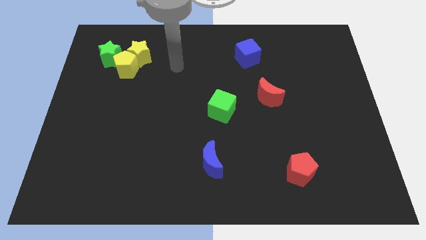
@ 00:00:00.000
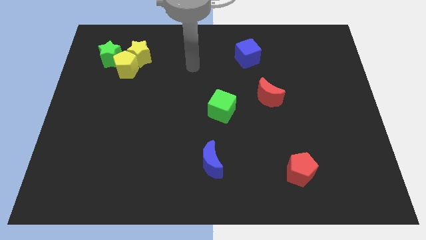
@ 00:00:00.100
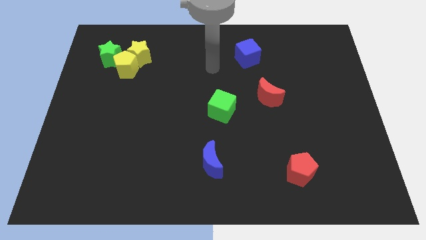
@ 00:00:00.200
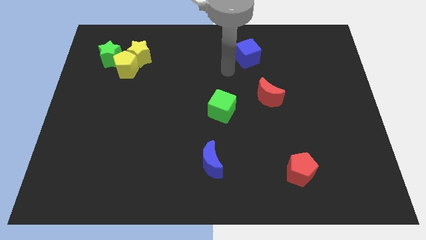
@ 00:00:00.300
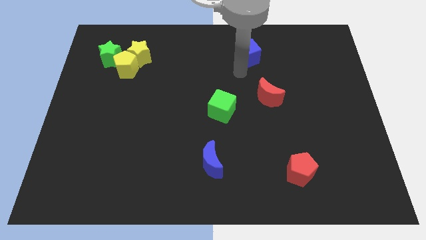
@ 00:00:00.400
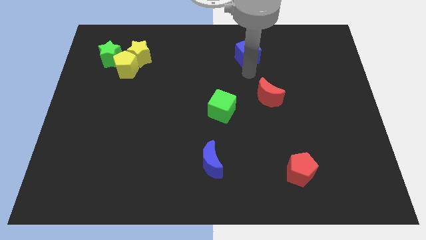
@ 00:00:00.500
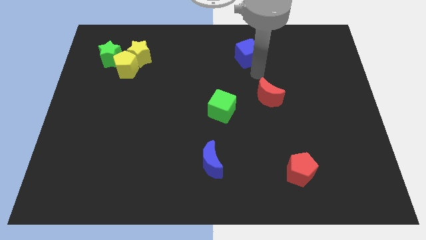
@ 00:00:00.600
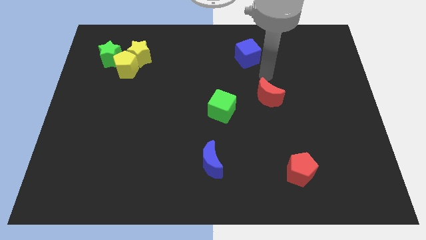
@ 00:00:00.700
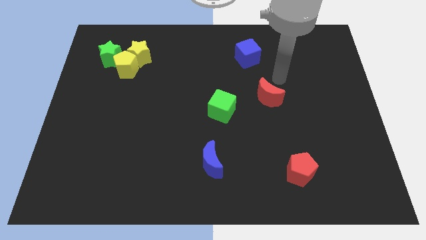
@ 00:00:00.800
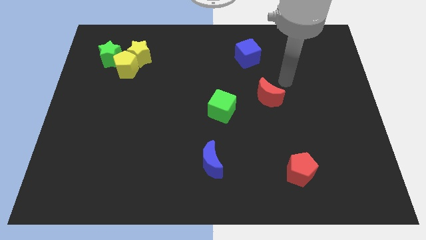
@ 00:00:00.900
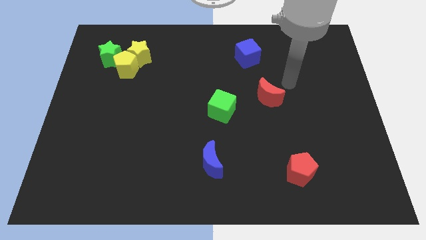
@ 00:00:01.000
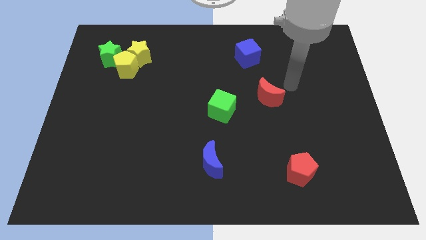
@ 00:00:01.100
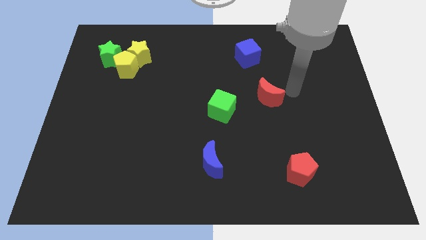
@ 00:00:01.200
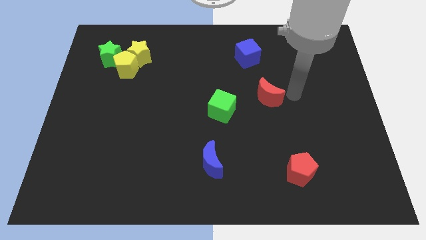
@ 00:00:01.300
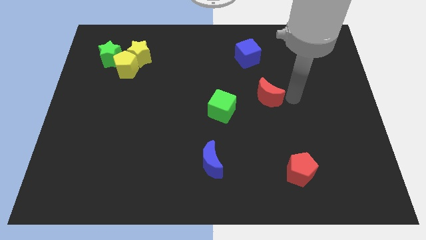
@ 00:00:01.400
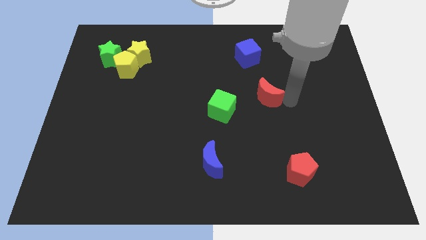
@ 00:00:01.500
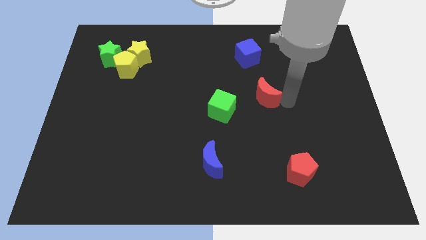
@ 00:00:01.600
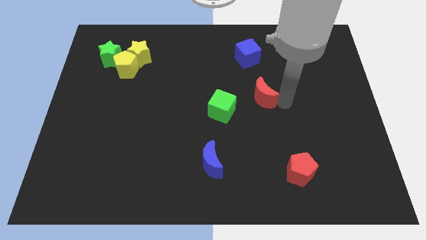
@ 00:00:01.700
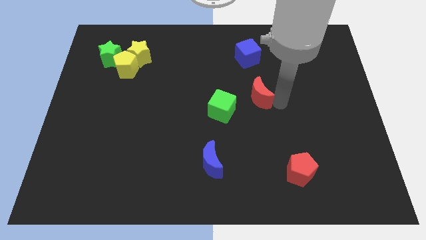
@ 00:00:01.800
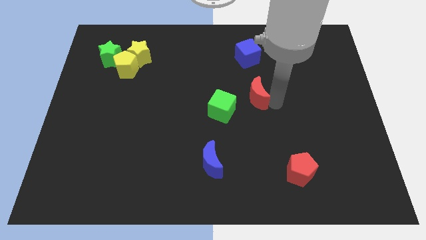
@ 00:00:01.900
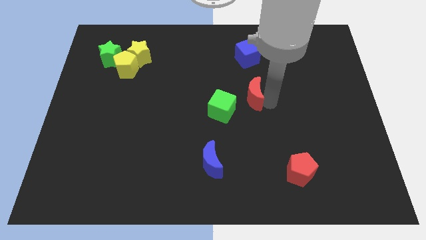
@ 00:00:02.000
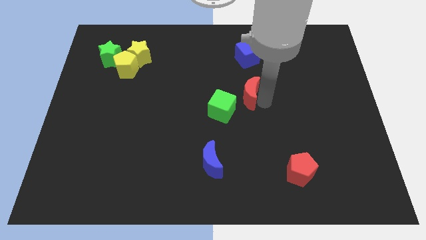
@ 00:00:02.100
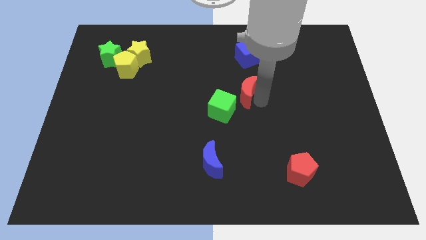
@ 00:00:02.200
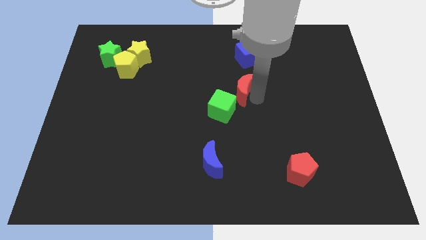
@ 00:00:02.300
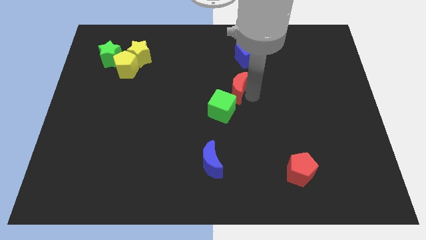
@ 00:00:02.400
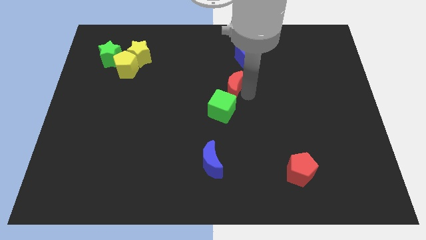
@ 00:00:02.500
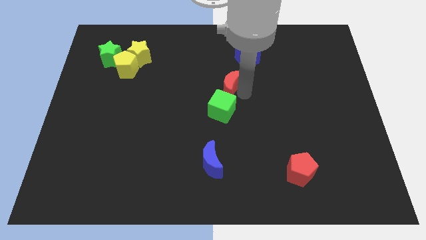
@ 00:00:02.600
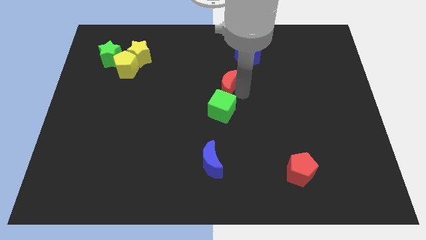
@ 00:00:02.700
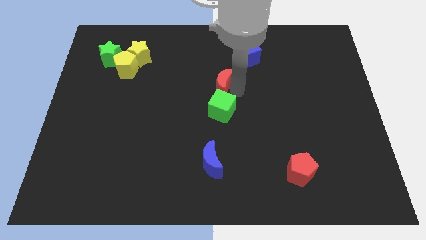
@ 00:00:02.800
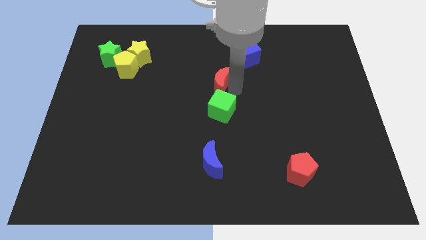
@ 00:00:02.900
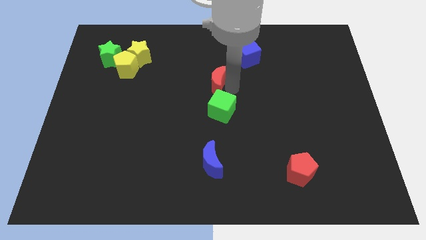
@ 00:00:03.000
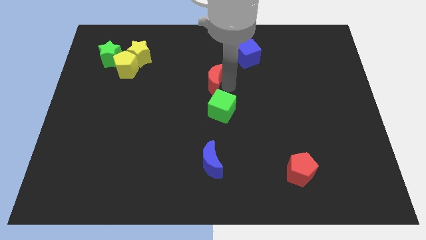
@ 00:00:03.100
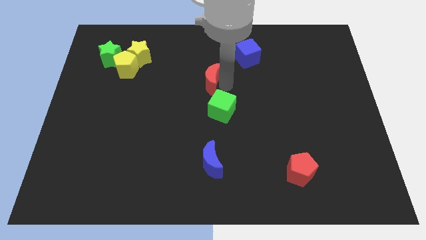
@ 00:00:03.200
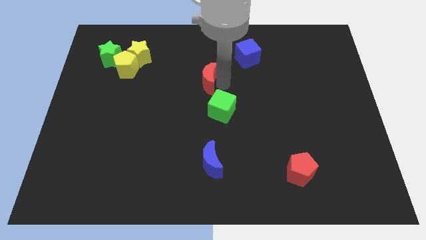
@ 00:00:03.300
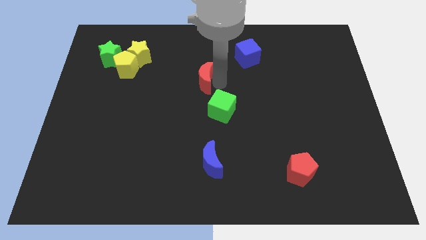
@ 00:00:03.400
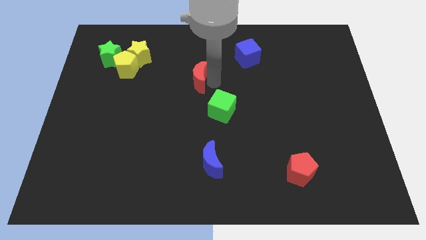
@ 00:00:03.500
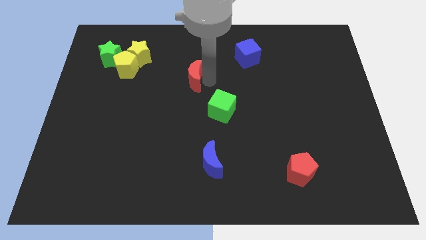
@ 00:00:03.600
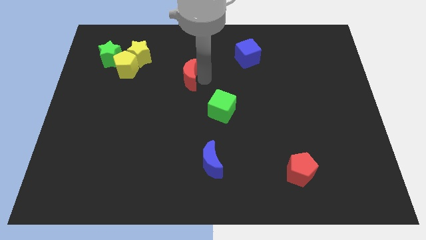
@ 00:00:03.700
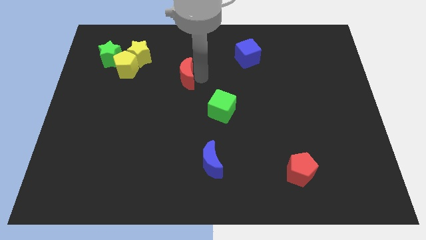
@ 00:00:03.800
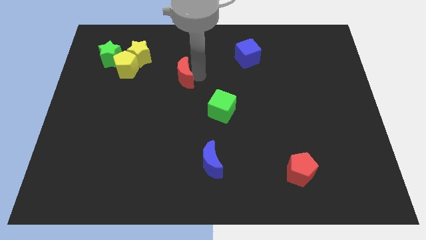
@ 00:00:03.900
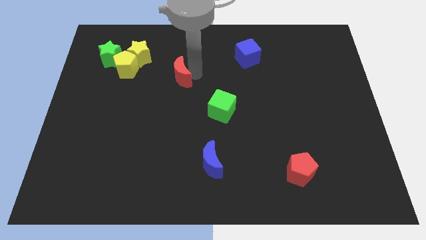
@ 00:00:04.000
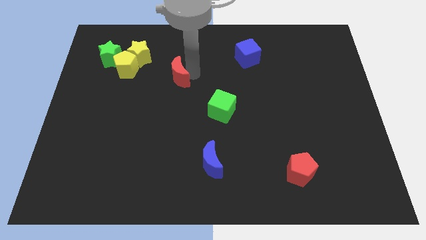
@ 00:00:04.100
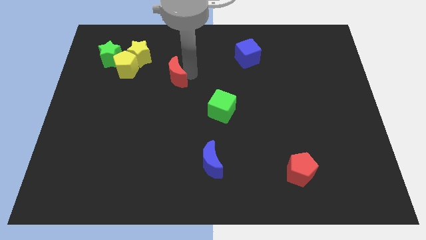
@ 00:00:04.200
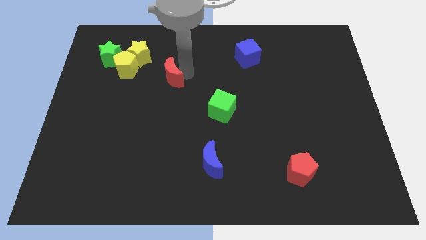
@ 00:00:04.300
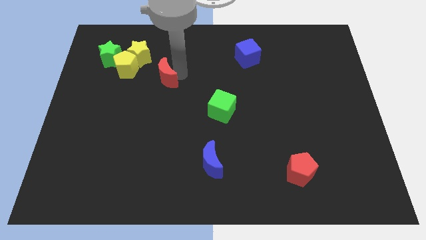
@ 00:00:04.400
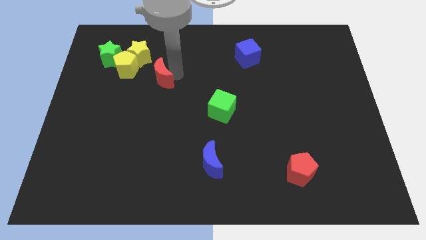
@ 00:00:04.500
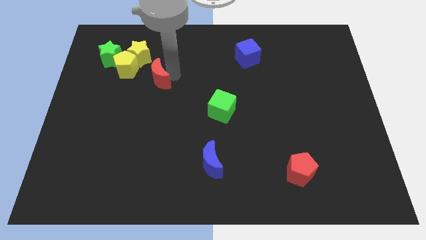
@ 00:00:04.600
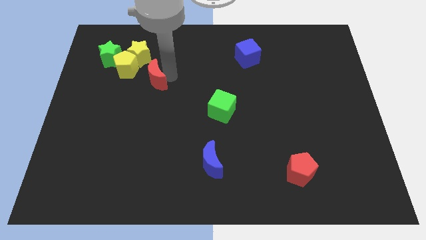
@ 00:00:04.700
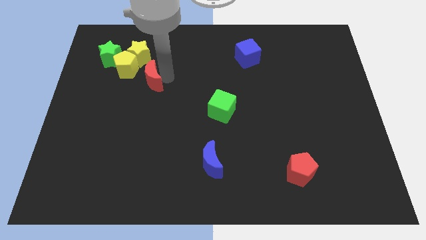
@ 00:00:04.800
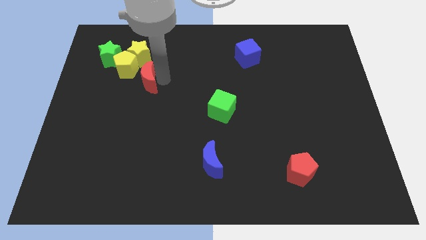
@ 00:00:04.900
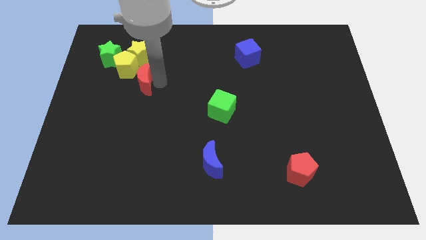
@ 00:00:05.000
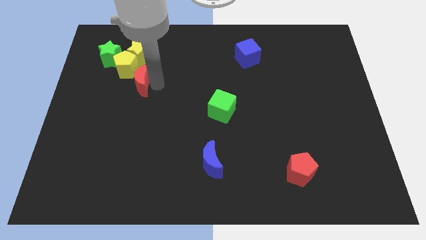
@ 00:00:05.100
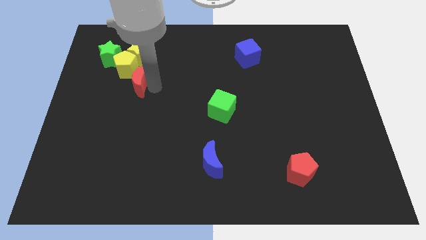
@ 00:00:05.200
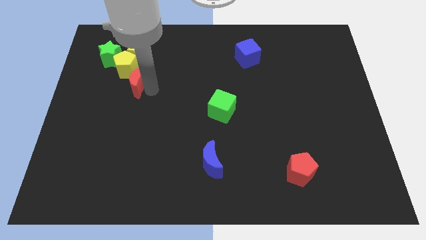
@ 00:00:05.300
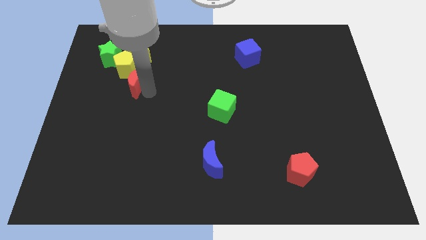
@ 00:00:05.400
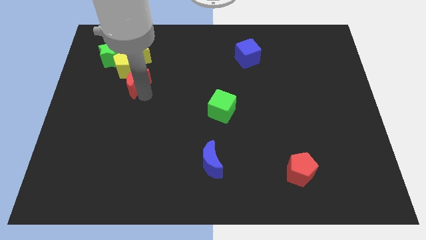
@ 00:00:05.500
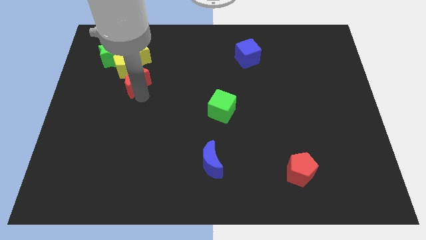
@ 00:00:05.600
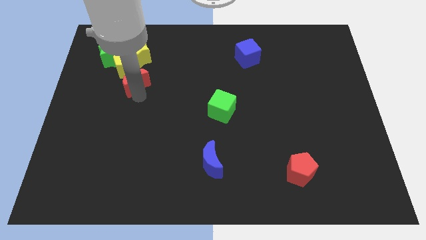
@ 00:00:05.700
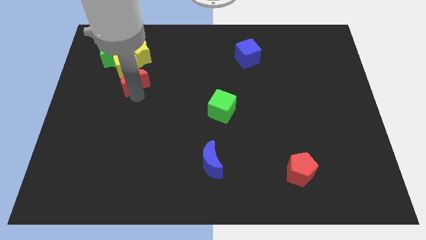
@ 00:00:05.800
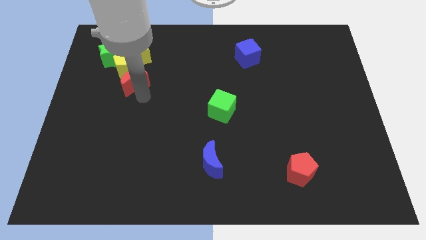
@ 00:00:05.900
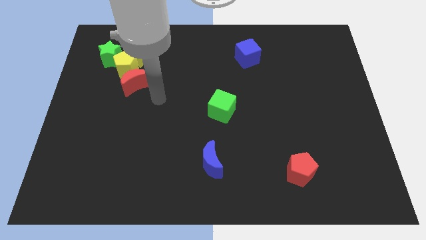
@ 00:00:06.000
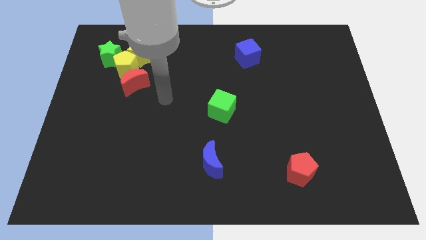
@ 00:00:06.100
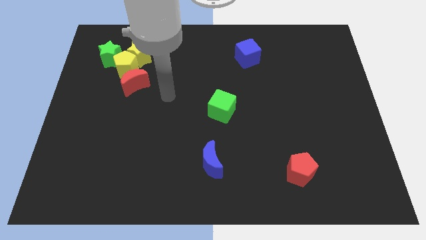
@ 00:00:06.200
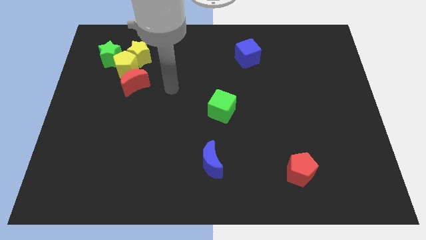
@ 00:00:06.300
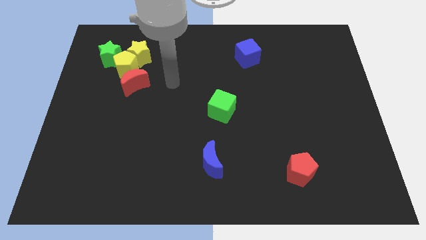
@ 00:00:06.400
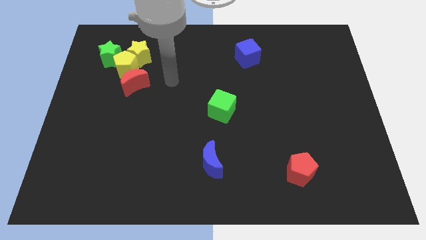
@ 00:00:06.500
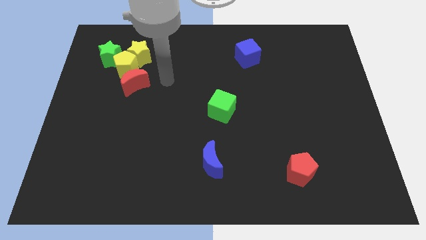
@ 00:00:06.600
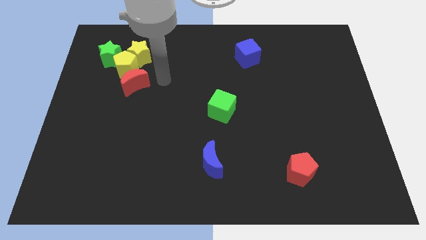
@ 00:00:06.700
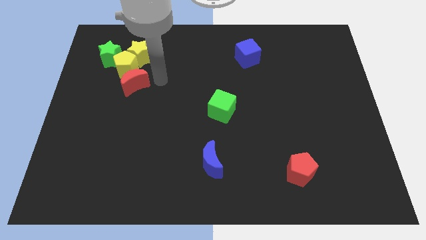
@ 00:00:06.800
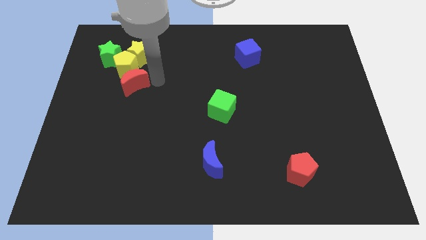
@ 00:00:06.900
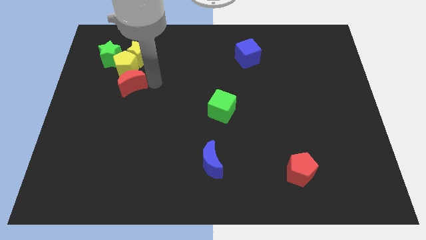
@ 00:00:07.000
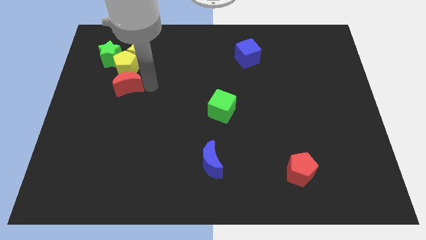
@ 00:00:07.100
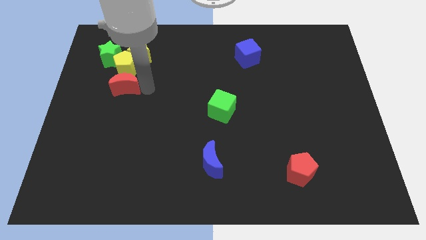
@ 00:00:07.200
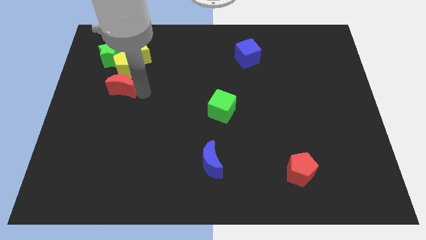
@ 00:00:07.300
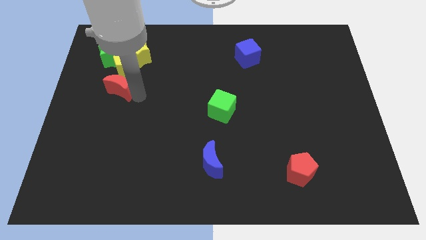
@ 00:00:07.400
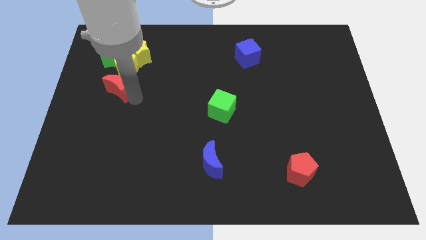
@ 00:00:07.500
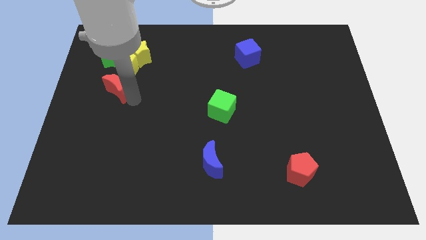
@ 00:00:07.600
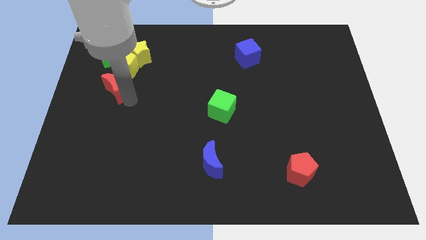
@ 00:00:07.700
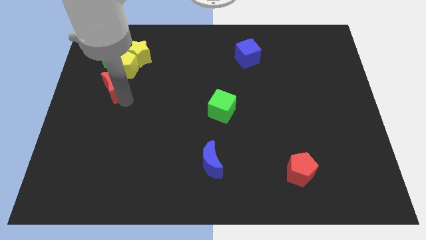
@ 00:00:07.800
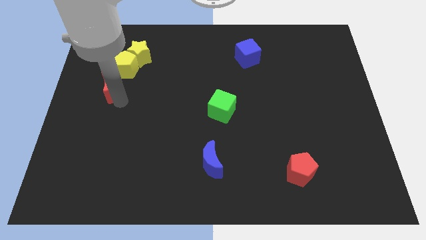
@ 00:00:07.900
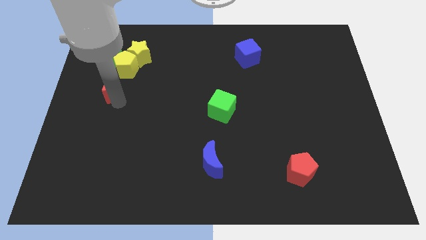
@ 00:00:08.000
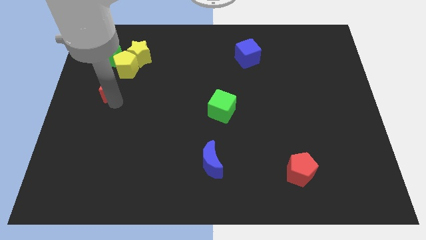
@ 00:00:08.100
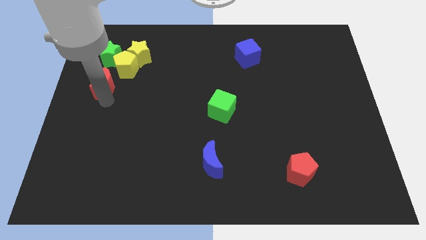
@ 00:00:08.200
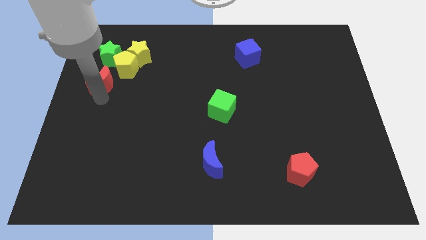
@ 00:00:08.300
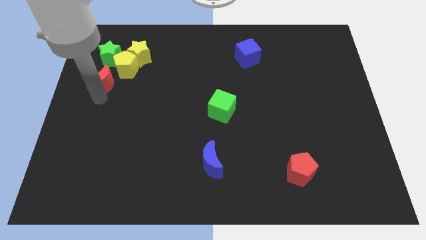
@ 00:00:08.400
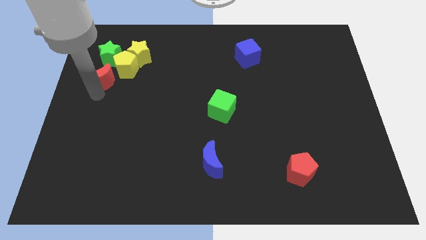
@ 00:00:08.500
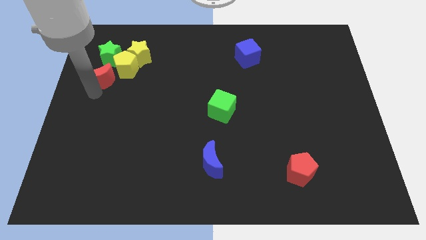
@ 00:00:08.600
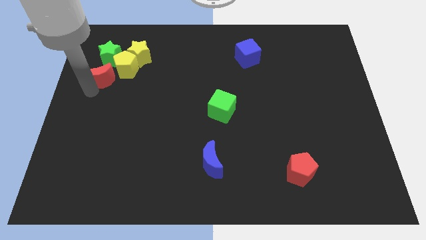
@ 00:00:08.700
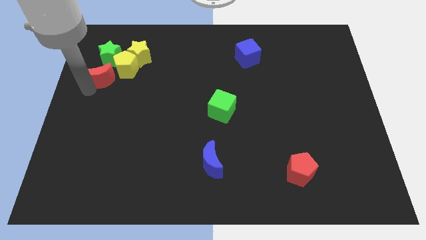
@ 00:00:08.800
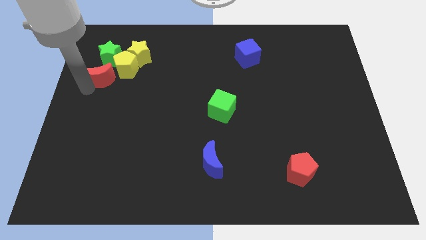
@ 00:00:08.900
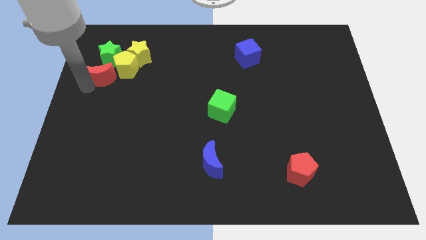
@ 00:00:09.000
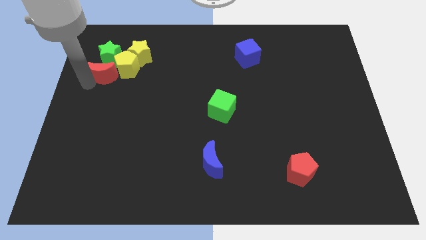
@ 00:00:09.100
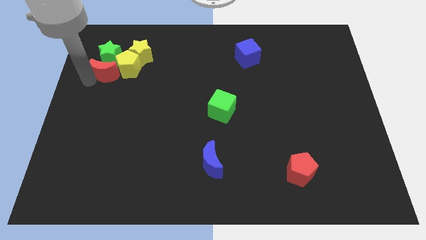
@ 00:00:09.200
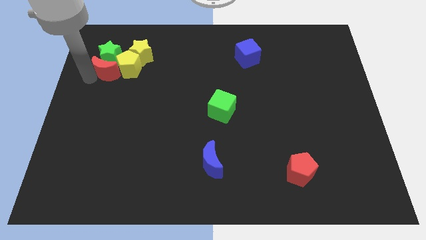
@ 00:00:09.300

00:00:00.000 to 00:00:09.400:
slide the red moon next to the green star
